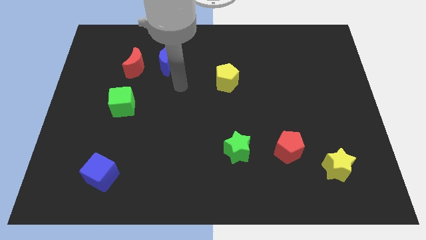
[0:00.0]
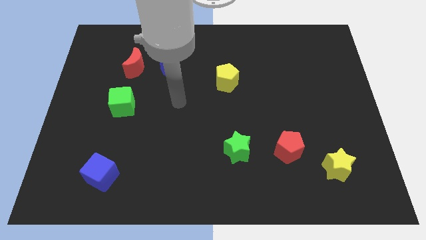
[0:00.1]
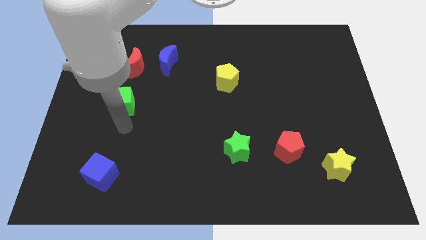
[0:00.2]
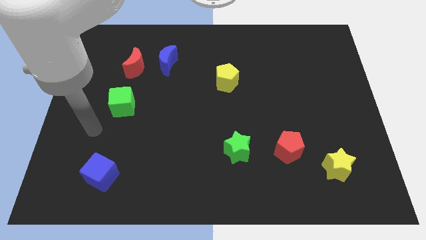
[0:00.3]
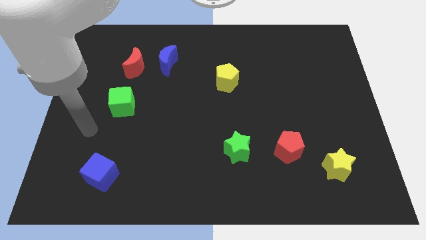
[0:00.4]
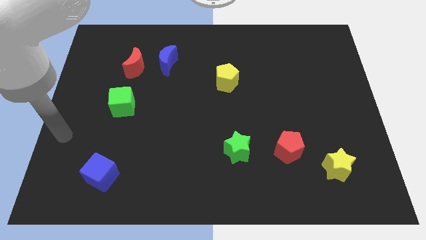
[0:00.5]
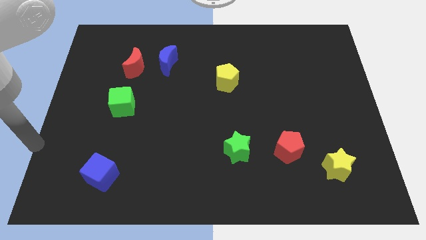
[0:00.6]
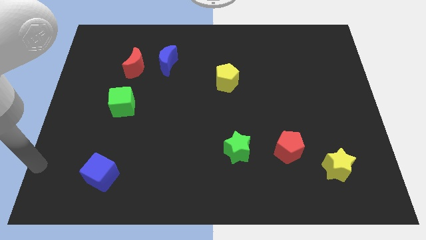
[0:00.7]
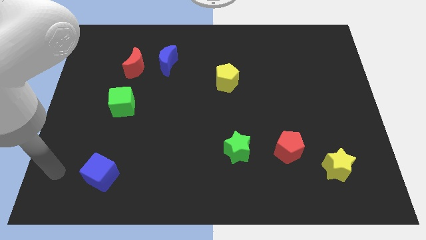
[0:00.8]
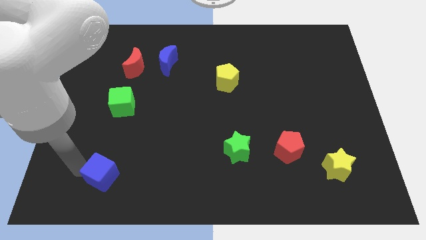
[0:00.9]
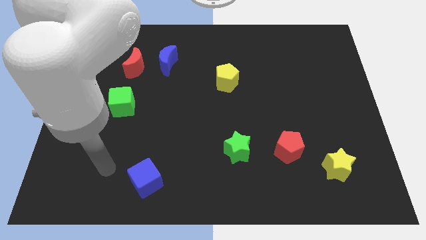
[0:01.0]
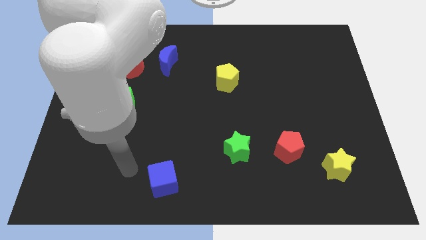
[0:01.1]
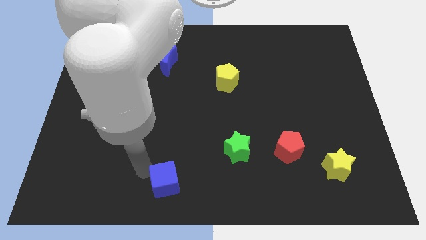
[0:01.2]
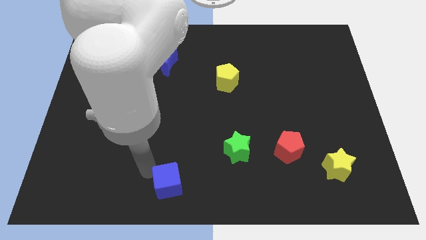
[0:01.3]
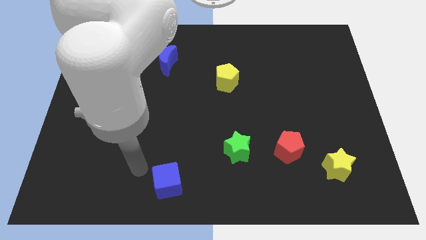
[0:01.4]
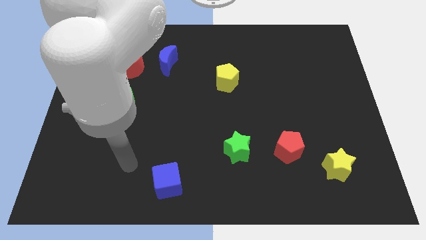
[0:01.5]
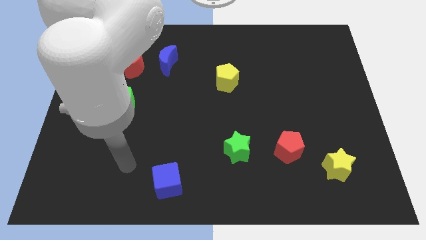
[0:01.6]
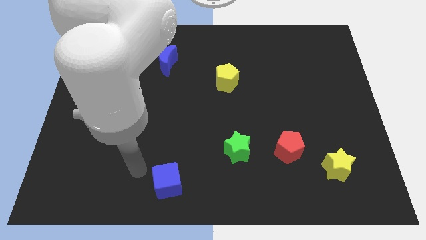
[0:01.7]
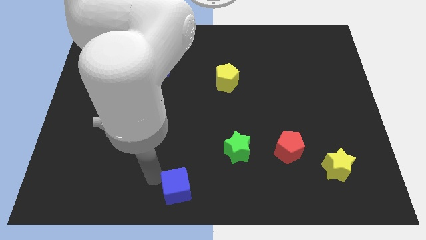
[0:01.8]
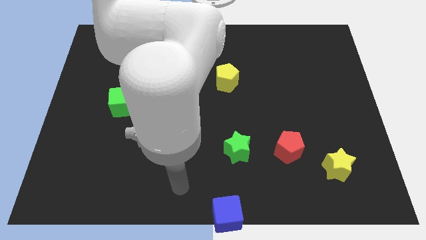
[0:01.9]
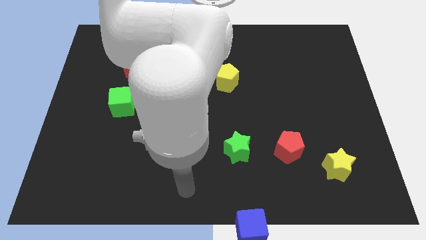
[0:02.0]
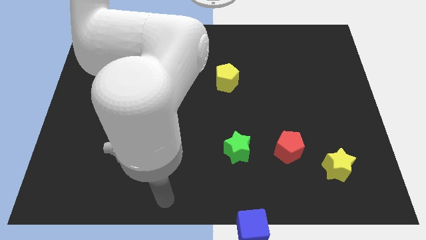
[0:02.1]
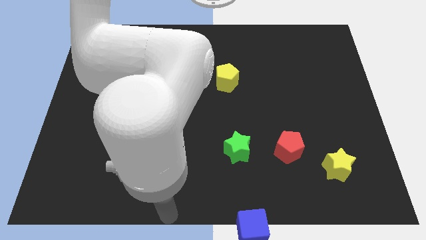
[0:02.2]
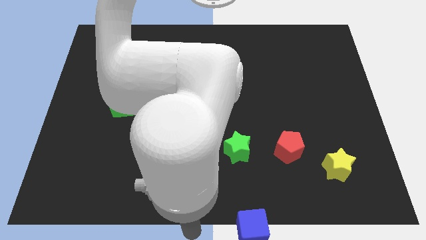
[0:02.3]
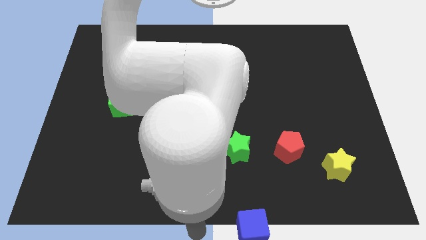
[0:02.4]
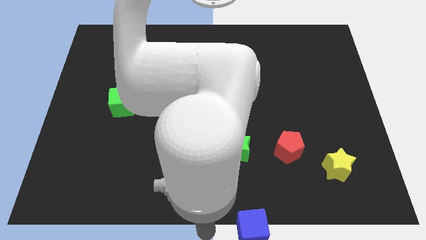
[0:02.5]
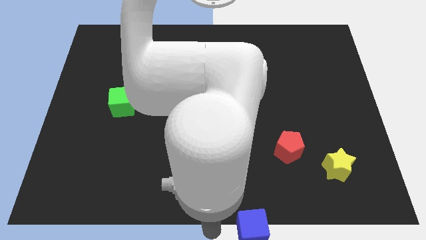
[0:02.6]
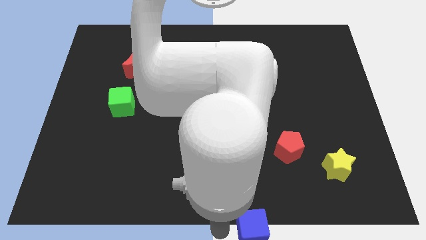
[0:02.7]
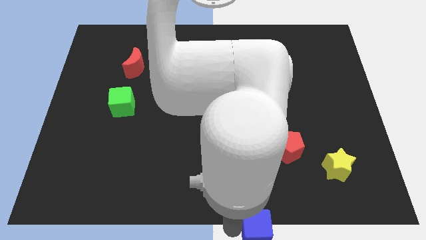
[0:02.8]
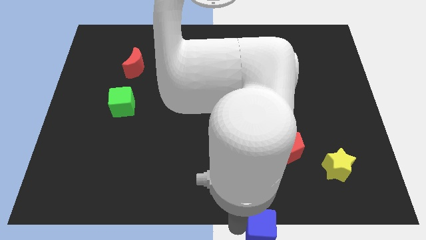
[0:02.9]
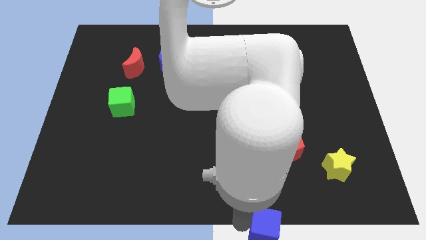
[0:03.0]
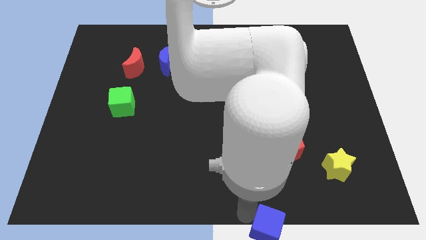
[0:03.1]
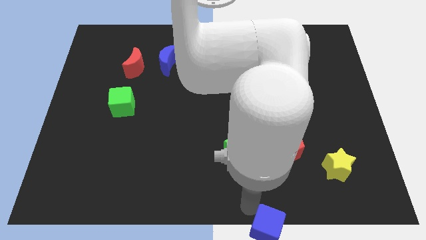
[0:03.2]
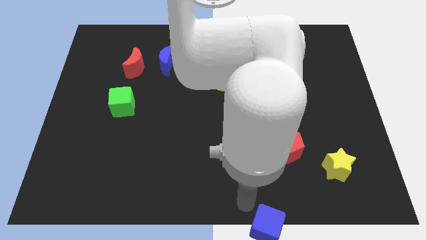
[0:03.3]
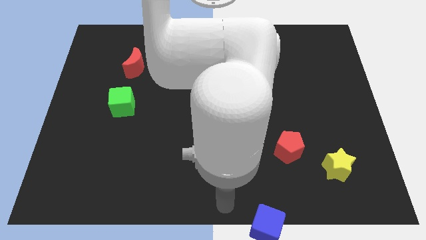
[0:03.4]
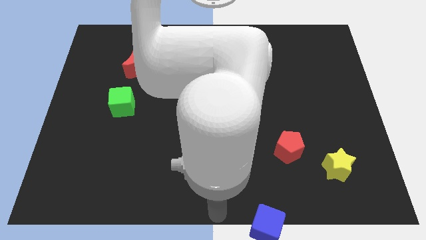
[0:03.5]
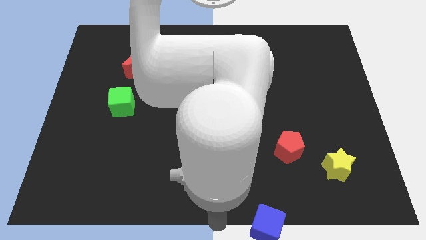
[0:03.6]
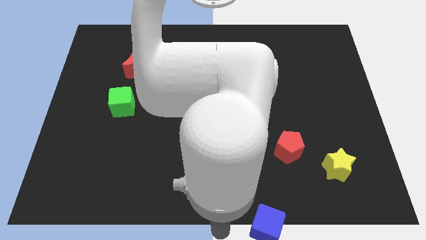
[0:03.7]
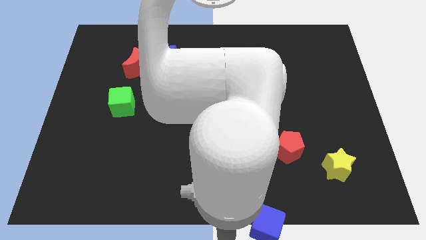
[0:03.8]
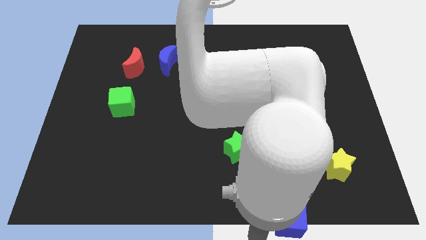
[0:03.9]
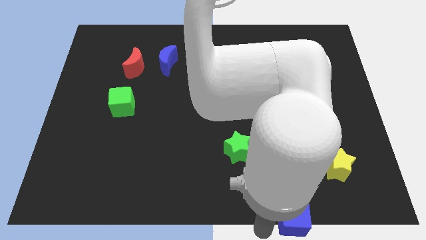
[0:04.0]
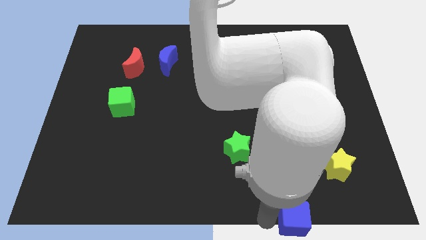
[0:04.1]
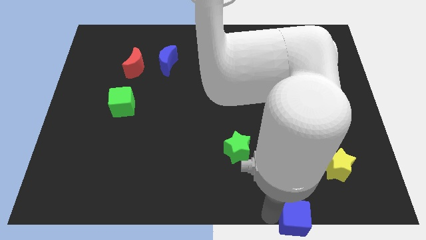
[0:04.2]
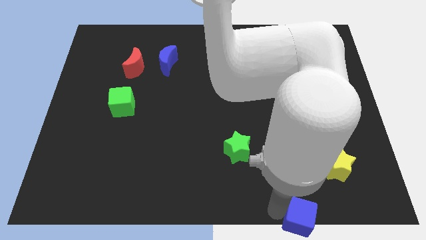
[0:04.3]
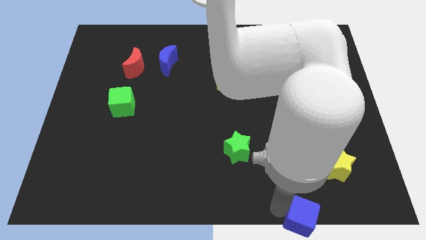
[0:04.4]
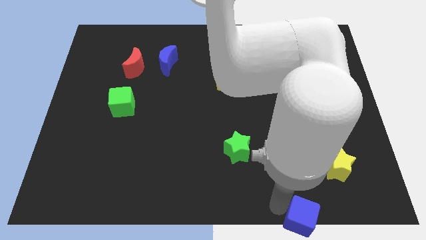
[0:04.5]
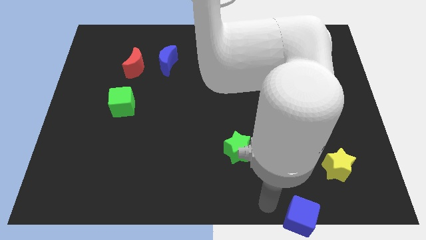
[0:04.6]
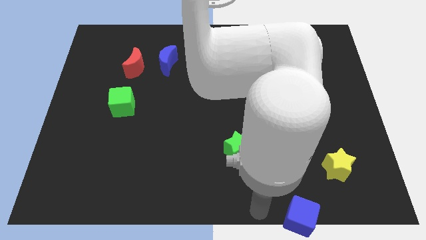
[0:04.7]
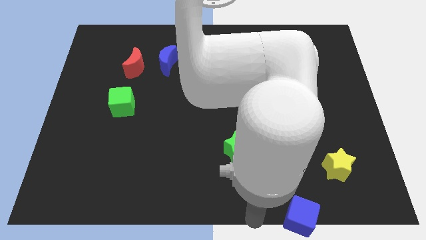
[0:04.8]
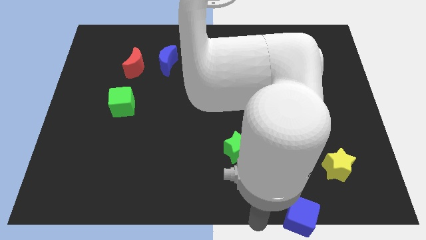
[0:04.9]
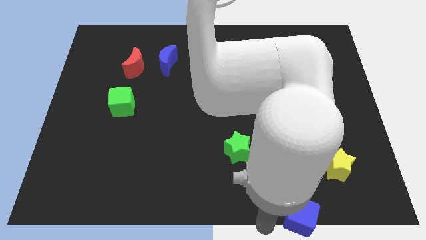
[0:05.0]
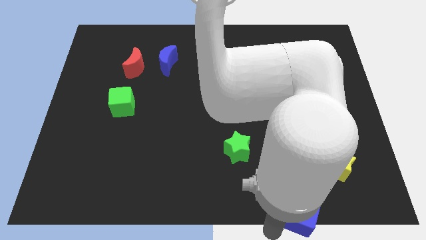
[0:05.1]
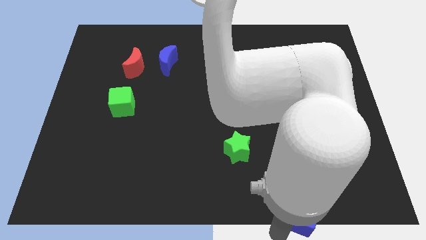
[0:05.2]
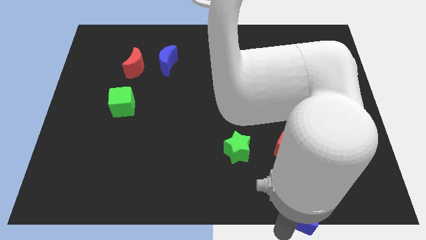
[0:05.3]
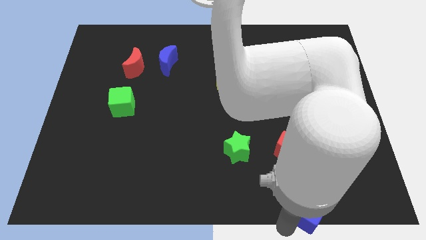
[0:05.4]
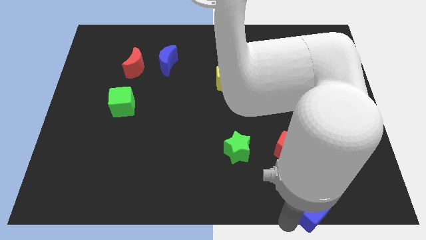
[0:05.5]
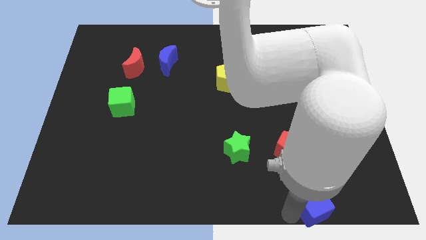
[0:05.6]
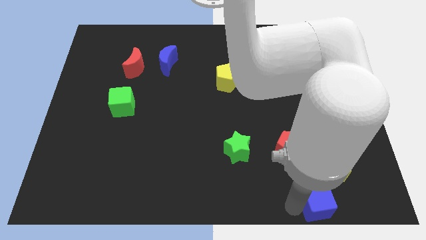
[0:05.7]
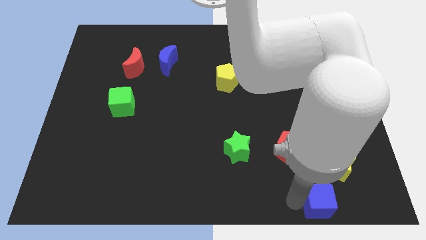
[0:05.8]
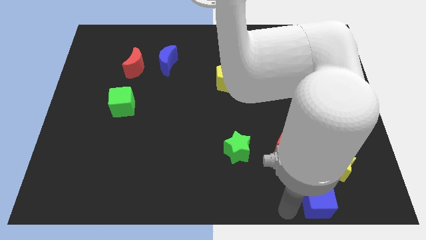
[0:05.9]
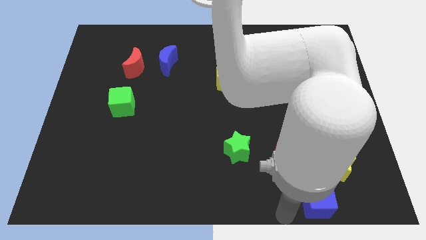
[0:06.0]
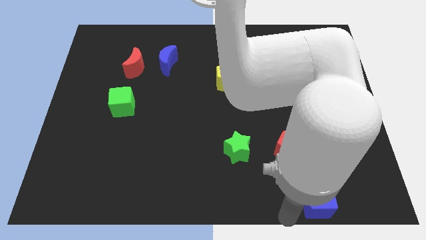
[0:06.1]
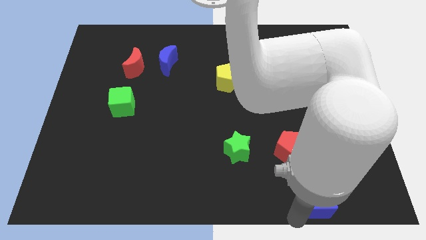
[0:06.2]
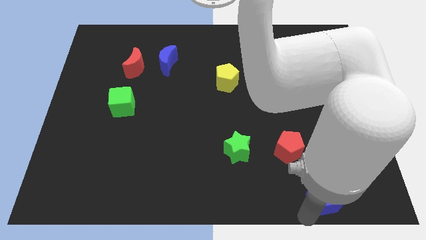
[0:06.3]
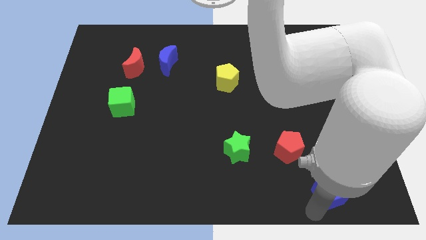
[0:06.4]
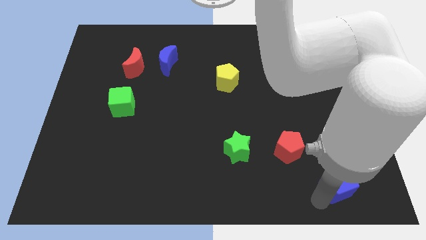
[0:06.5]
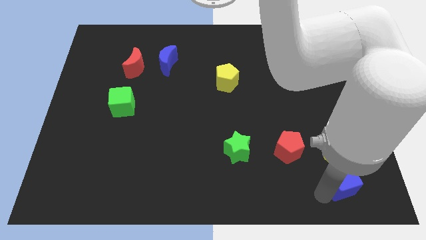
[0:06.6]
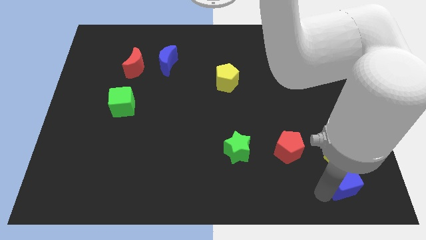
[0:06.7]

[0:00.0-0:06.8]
push the blue cube next to the yellow star

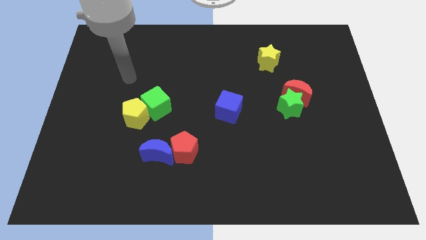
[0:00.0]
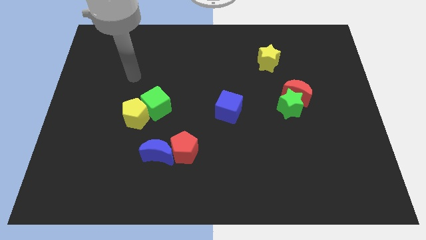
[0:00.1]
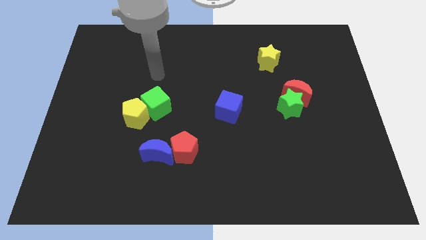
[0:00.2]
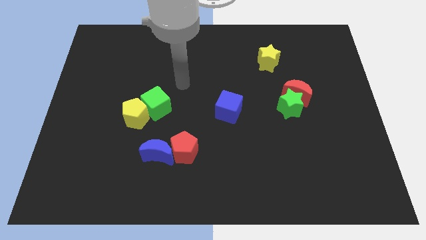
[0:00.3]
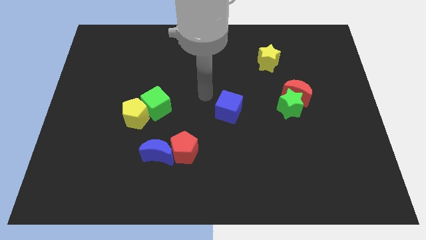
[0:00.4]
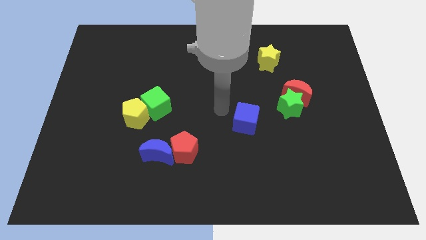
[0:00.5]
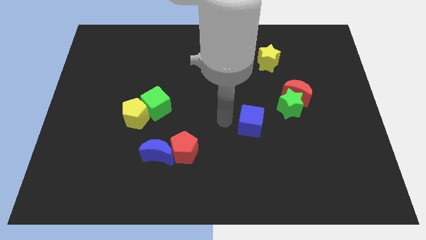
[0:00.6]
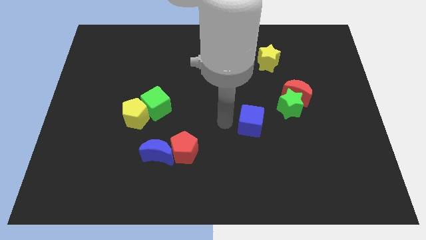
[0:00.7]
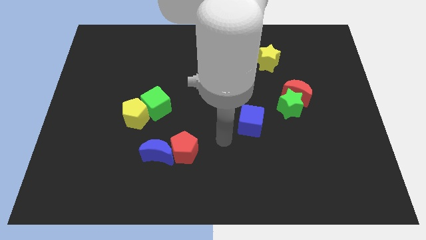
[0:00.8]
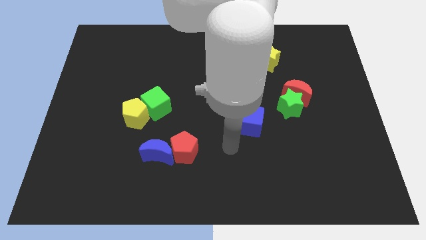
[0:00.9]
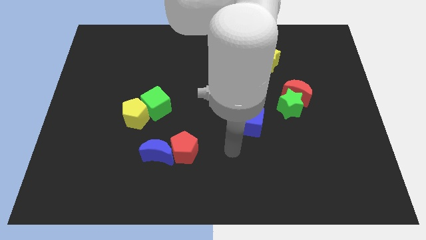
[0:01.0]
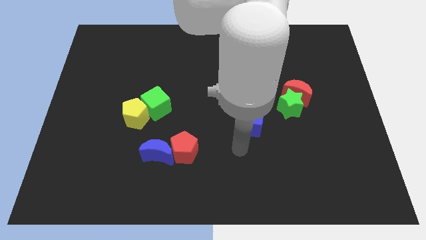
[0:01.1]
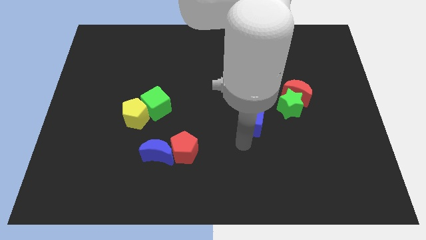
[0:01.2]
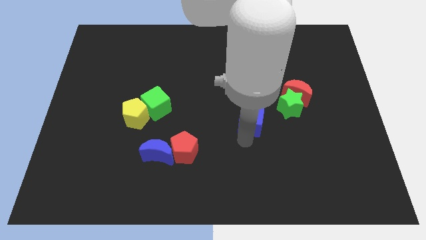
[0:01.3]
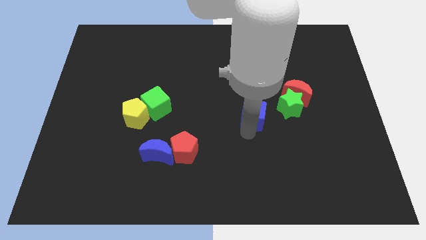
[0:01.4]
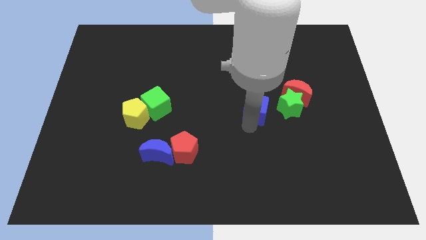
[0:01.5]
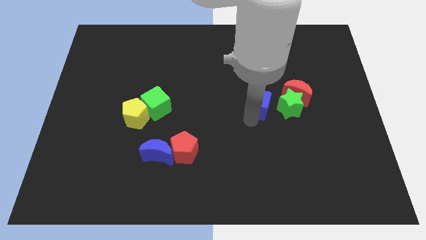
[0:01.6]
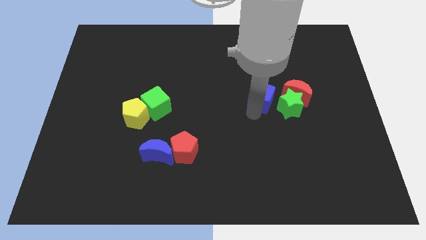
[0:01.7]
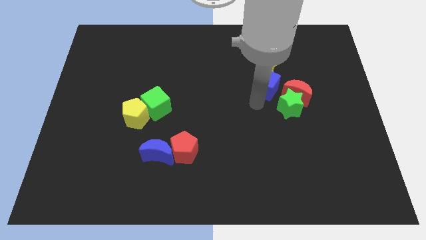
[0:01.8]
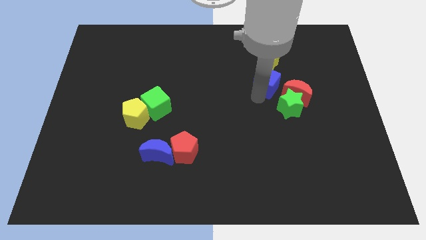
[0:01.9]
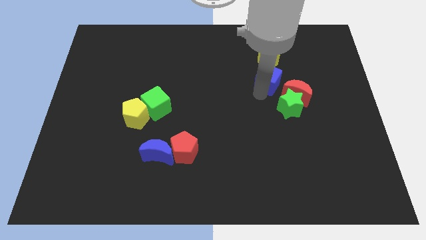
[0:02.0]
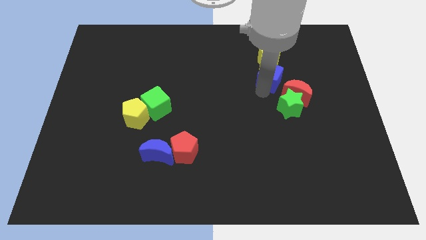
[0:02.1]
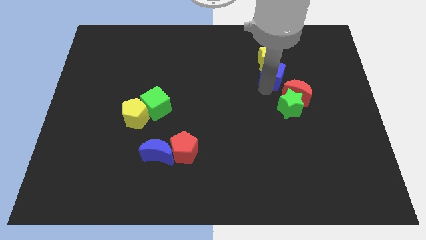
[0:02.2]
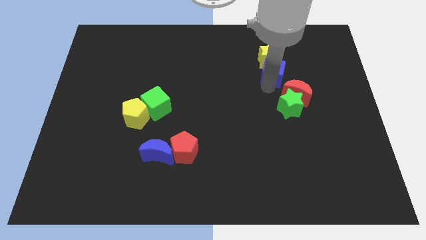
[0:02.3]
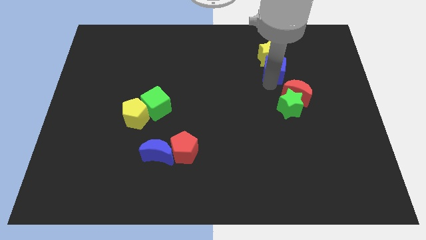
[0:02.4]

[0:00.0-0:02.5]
push the blue cube close to the yellow star
